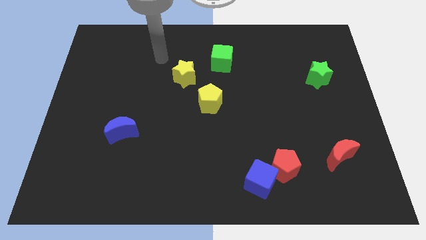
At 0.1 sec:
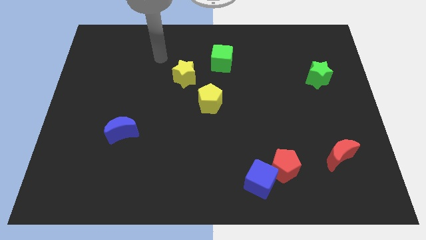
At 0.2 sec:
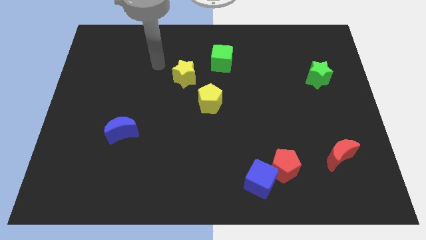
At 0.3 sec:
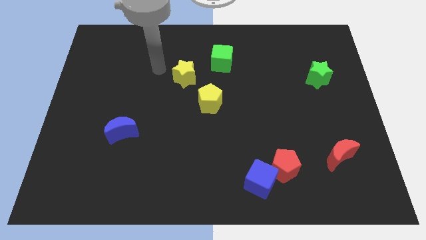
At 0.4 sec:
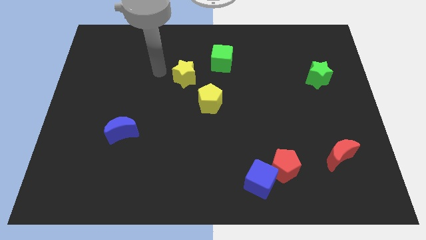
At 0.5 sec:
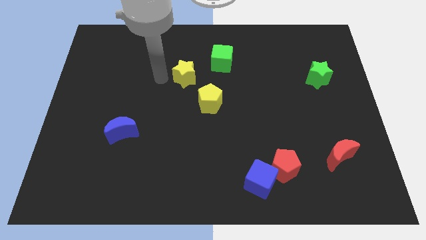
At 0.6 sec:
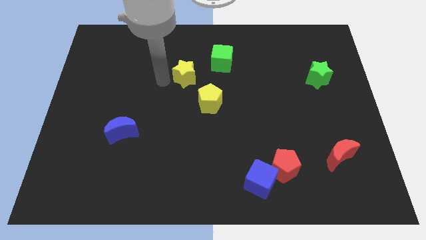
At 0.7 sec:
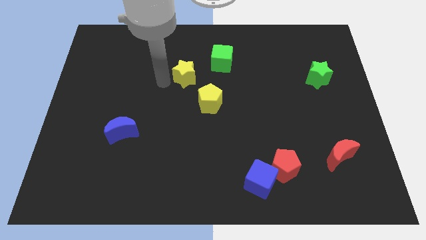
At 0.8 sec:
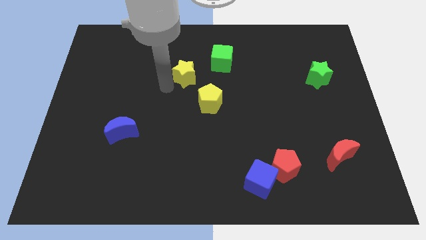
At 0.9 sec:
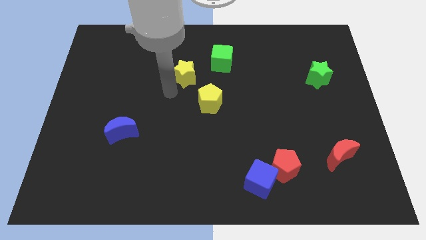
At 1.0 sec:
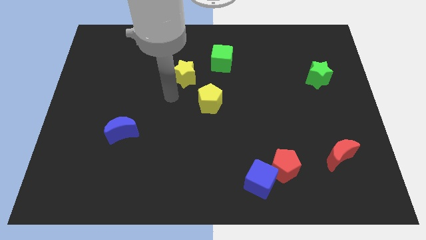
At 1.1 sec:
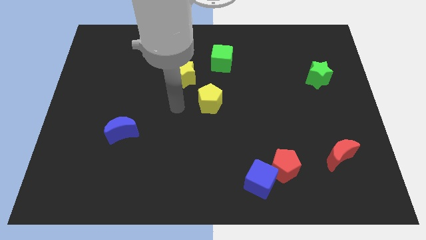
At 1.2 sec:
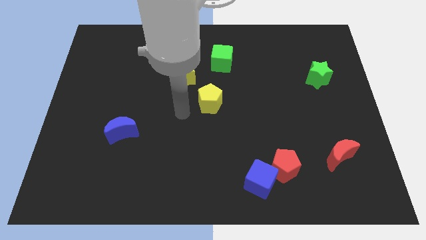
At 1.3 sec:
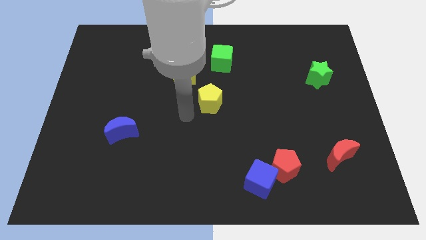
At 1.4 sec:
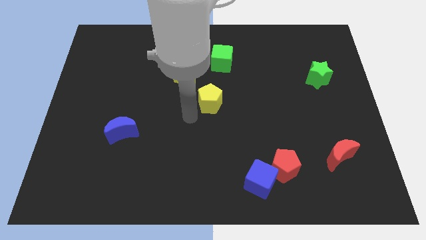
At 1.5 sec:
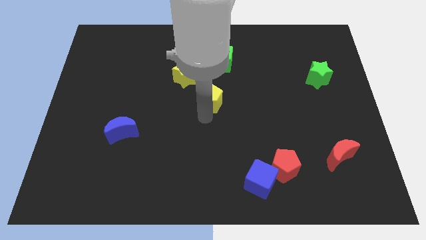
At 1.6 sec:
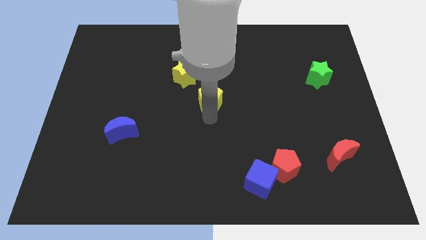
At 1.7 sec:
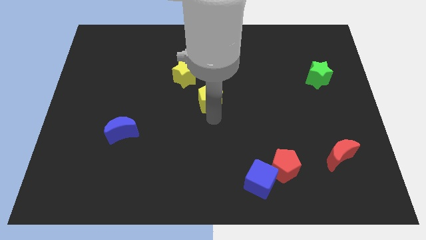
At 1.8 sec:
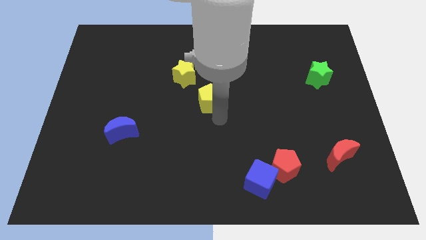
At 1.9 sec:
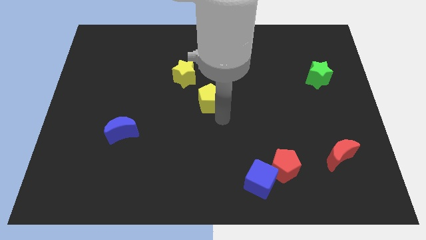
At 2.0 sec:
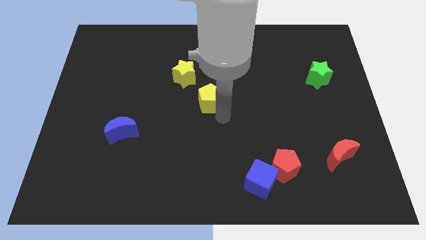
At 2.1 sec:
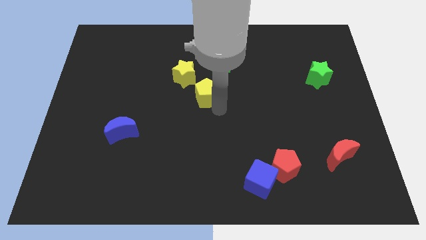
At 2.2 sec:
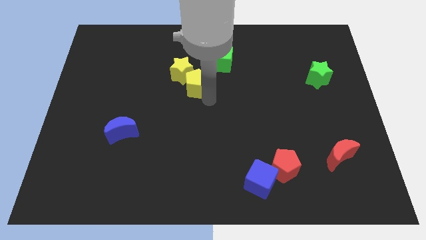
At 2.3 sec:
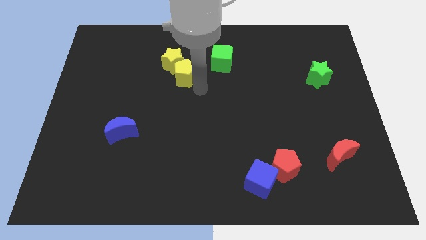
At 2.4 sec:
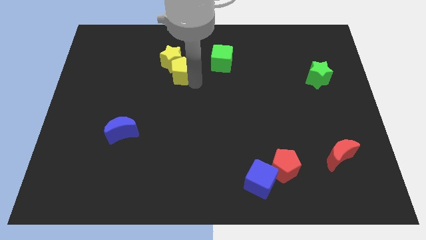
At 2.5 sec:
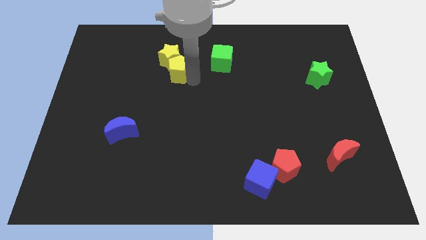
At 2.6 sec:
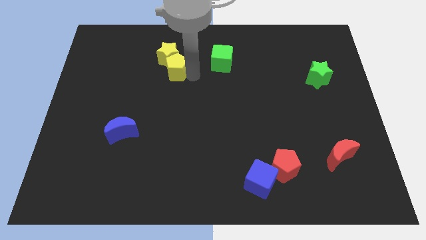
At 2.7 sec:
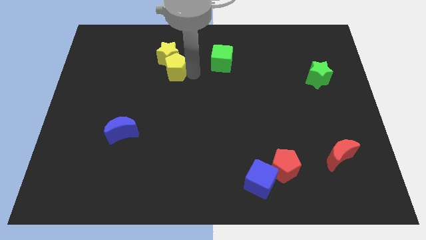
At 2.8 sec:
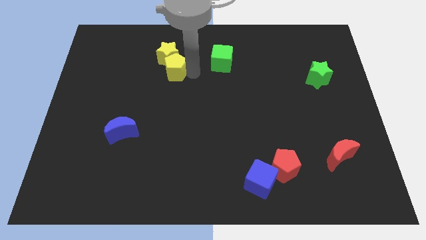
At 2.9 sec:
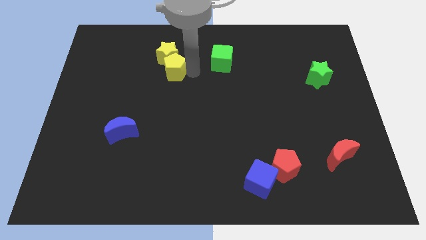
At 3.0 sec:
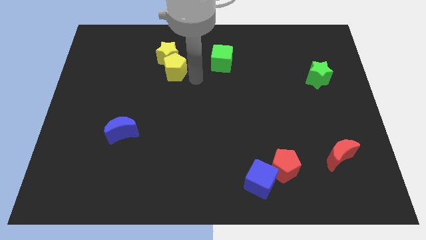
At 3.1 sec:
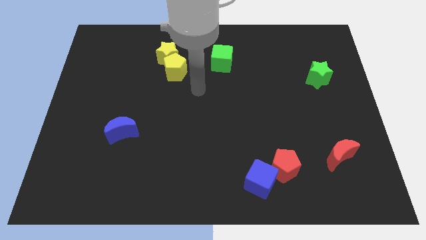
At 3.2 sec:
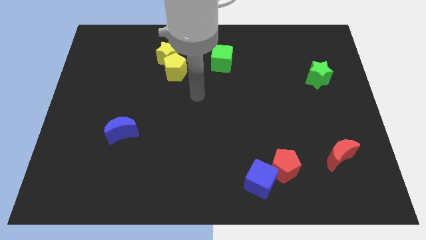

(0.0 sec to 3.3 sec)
push the yellow pentagon into the yellow star

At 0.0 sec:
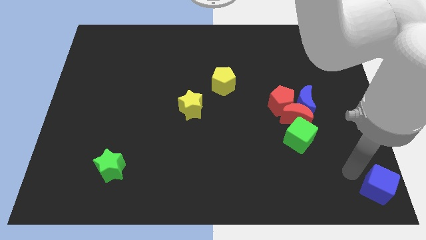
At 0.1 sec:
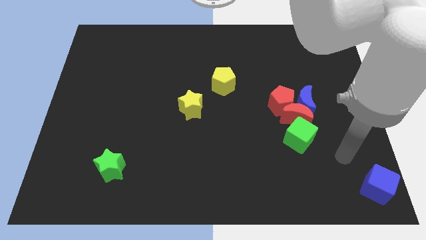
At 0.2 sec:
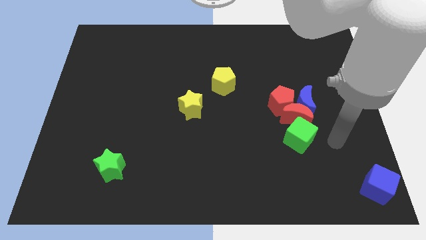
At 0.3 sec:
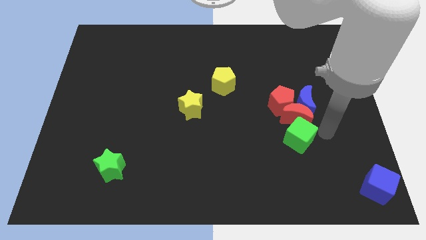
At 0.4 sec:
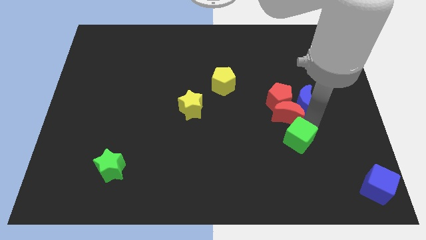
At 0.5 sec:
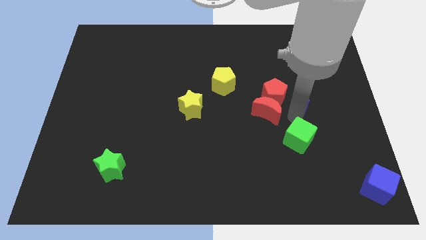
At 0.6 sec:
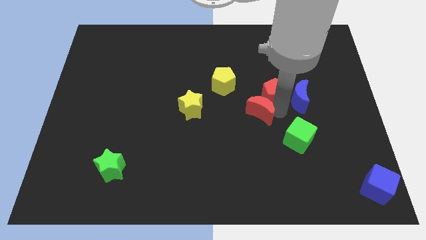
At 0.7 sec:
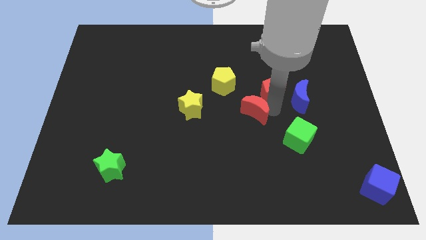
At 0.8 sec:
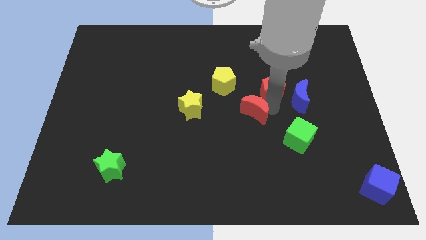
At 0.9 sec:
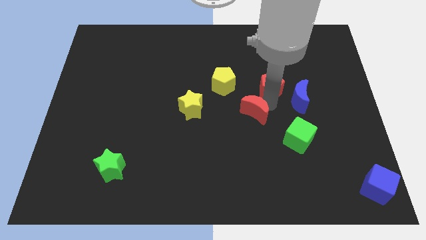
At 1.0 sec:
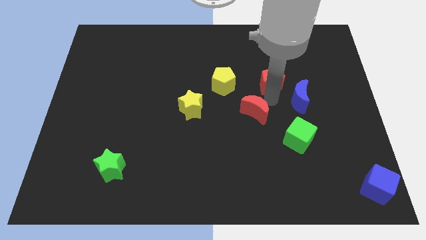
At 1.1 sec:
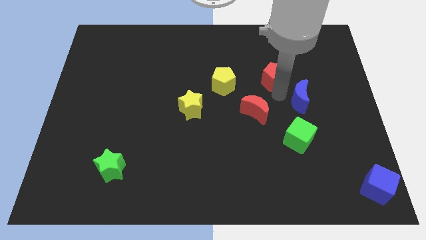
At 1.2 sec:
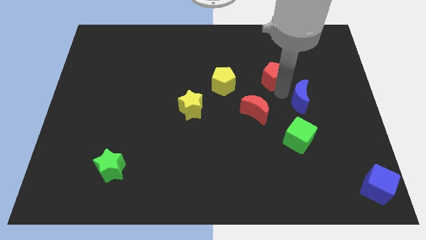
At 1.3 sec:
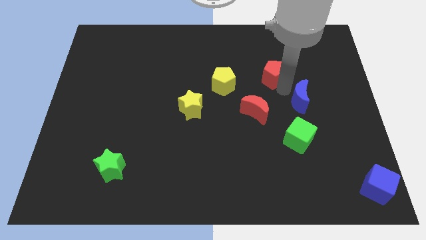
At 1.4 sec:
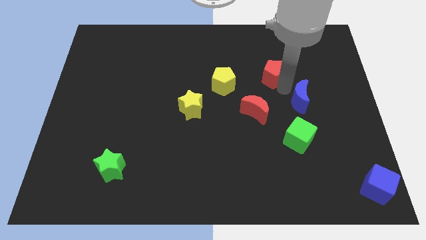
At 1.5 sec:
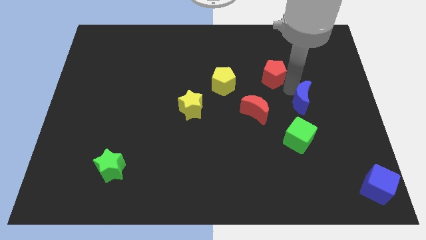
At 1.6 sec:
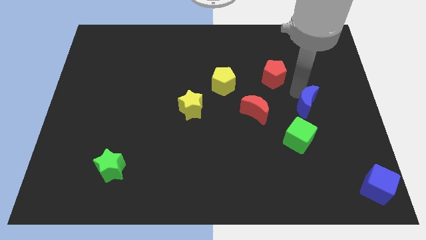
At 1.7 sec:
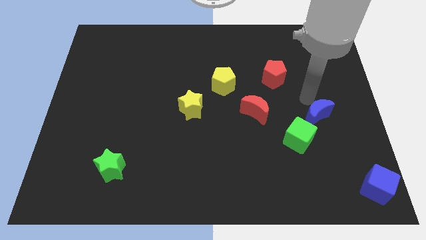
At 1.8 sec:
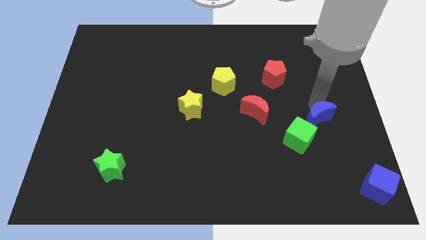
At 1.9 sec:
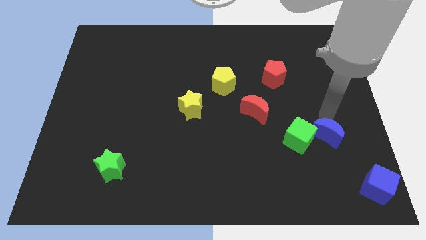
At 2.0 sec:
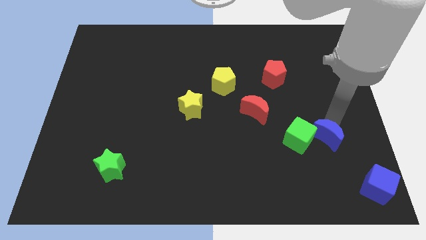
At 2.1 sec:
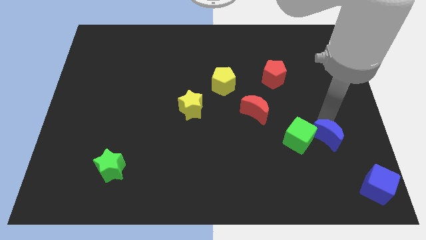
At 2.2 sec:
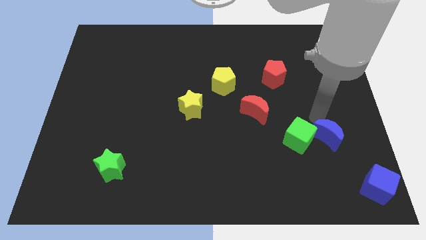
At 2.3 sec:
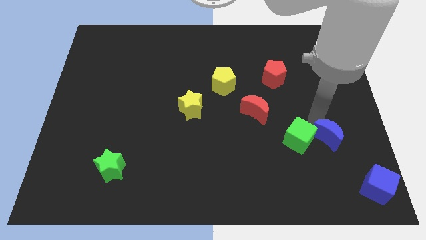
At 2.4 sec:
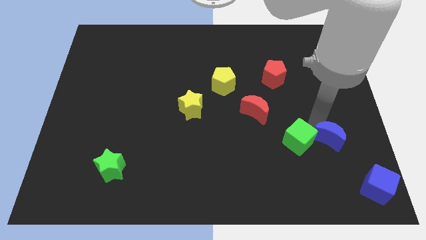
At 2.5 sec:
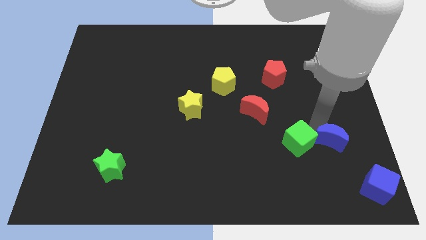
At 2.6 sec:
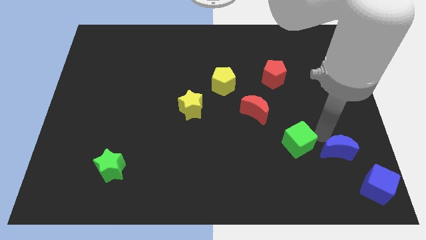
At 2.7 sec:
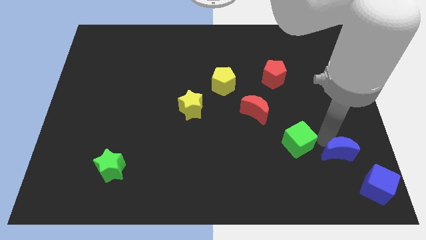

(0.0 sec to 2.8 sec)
move the blue crescent to the right of the green cube

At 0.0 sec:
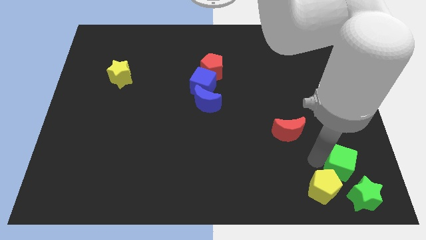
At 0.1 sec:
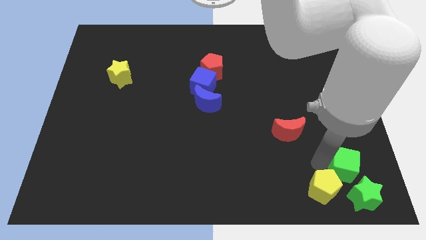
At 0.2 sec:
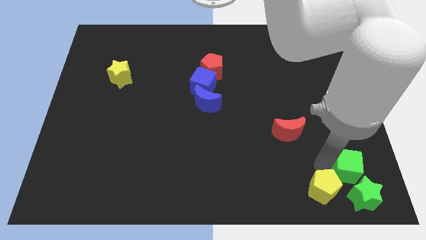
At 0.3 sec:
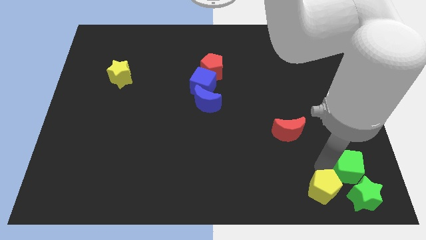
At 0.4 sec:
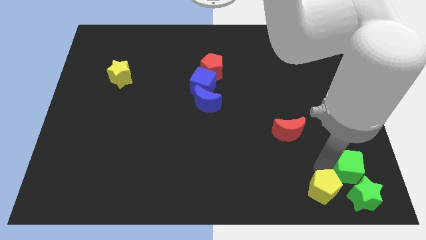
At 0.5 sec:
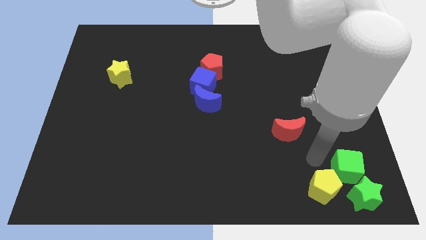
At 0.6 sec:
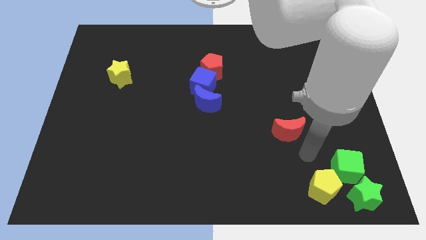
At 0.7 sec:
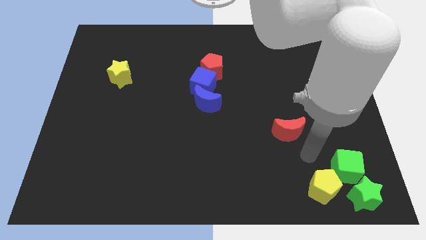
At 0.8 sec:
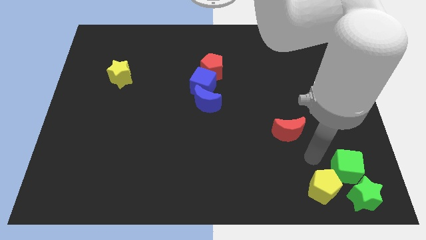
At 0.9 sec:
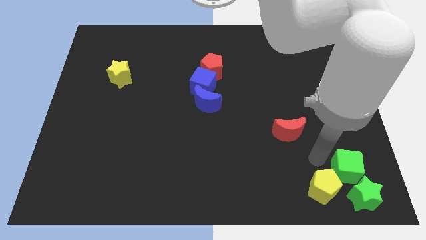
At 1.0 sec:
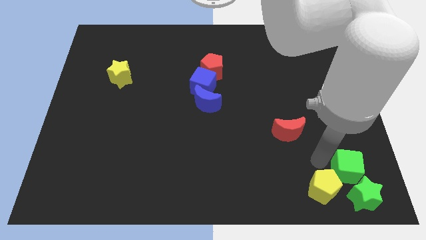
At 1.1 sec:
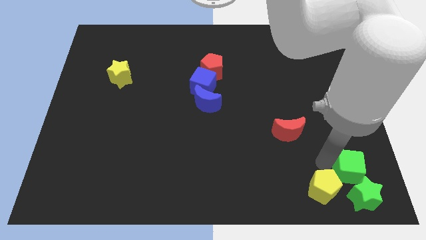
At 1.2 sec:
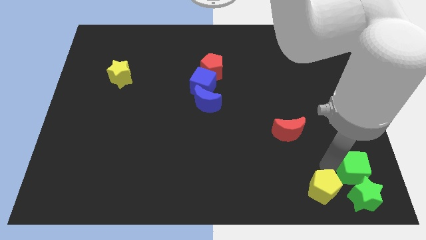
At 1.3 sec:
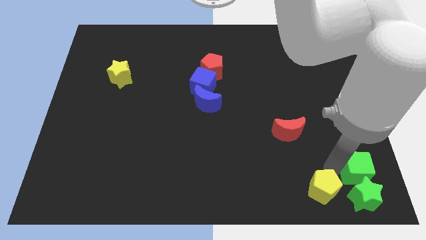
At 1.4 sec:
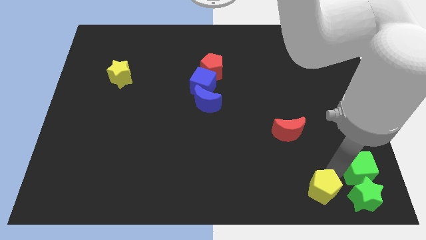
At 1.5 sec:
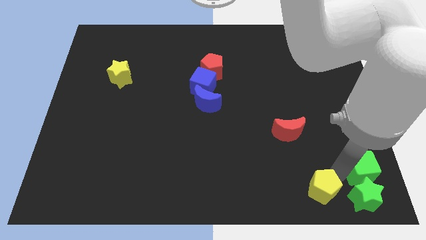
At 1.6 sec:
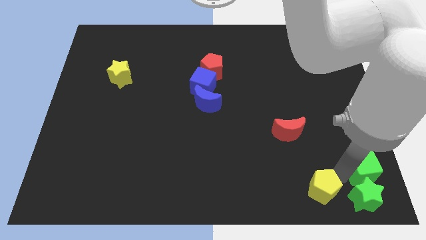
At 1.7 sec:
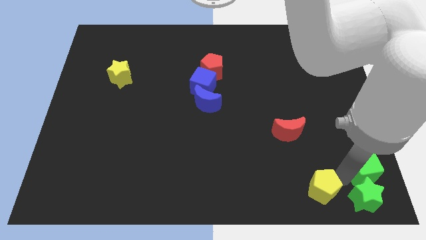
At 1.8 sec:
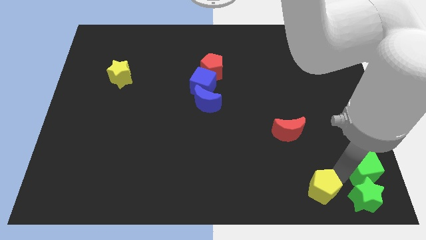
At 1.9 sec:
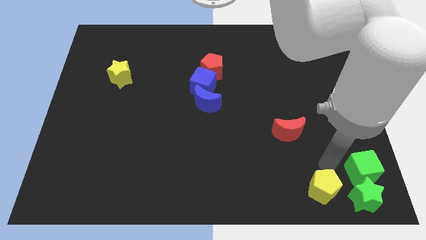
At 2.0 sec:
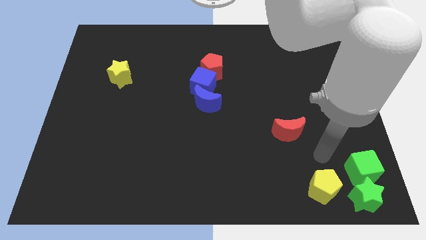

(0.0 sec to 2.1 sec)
place green cube above the green star

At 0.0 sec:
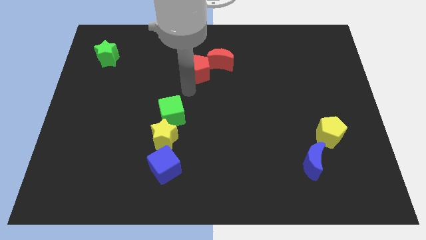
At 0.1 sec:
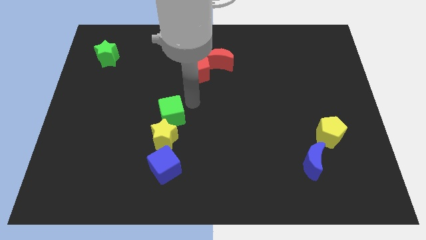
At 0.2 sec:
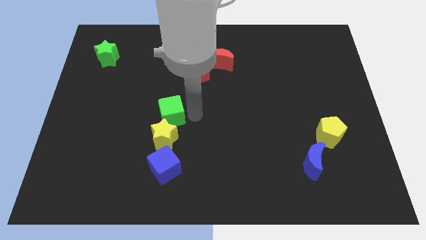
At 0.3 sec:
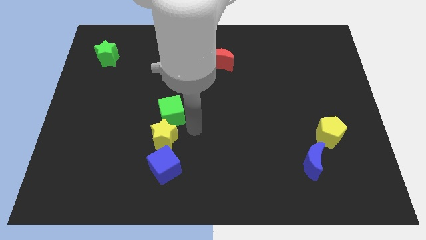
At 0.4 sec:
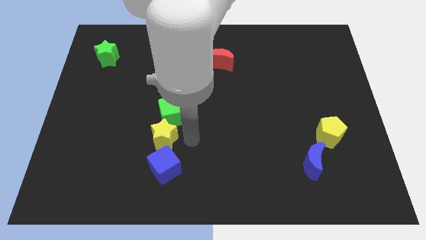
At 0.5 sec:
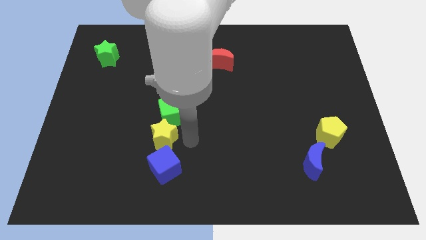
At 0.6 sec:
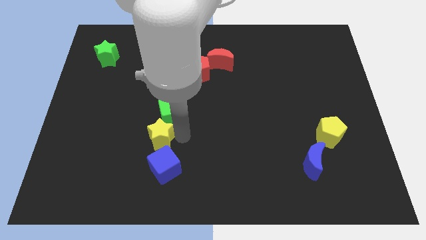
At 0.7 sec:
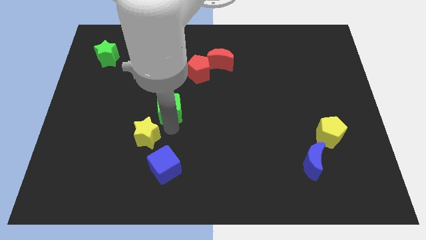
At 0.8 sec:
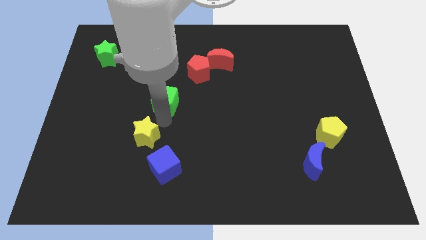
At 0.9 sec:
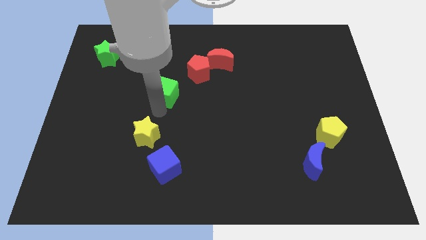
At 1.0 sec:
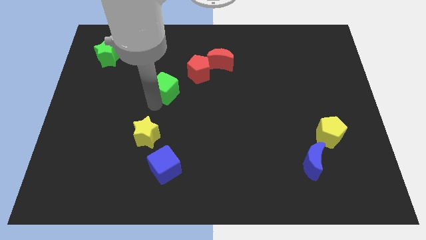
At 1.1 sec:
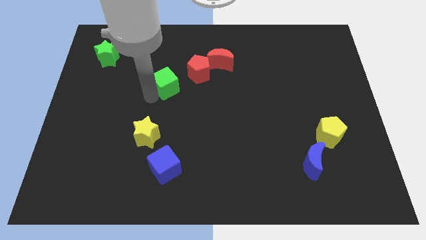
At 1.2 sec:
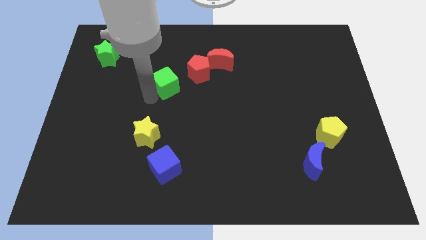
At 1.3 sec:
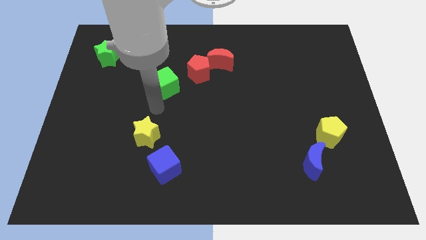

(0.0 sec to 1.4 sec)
push green cube upwards
